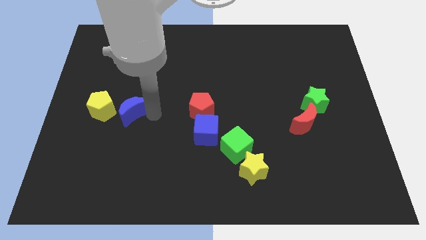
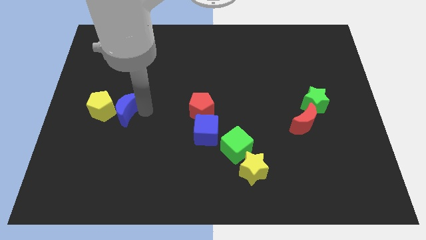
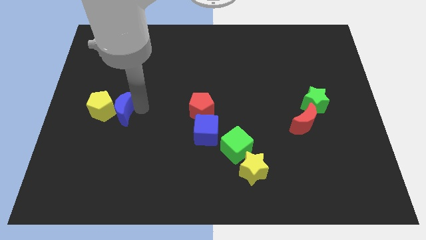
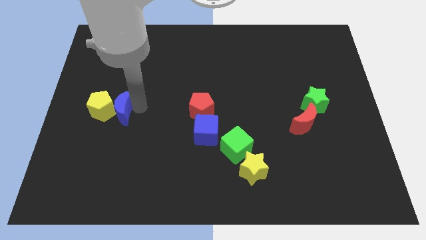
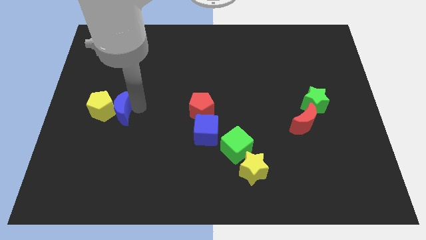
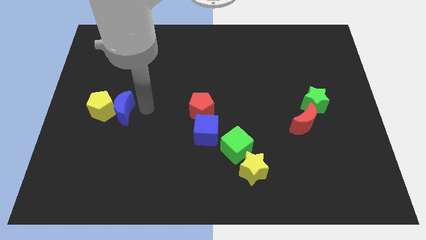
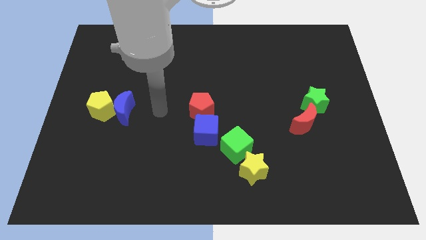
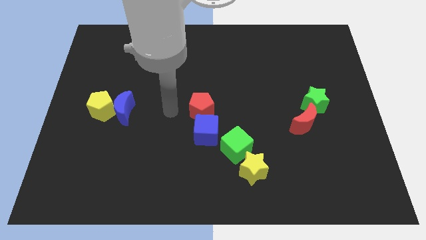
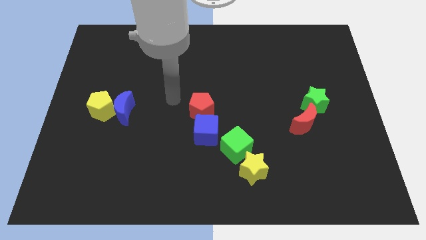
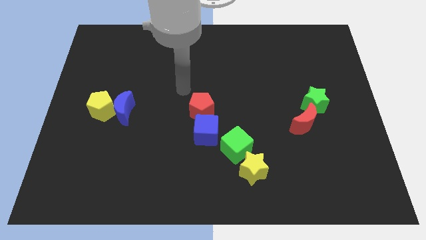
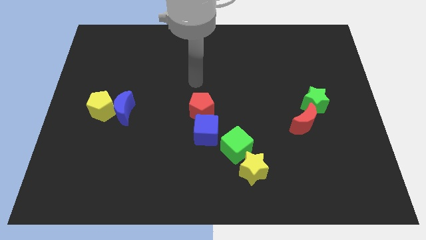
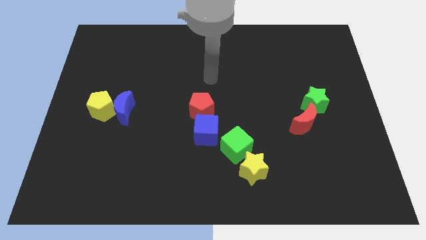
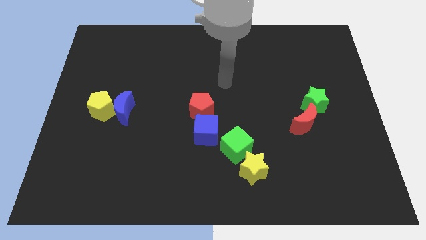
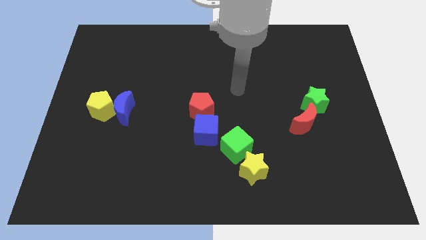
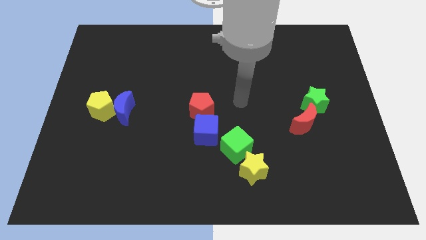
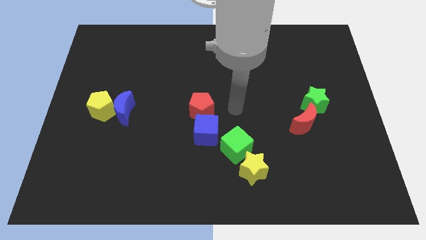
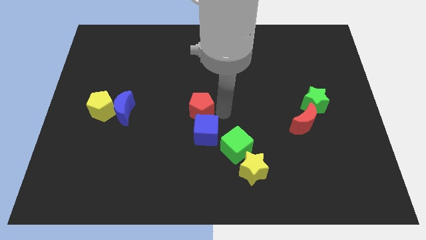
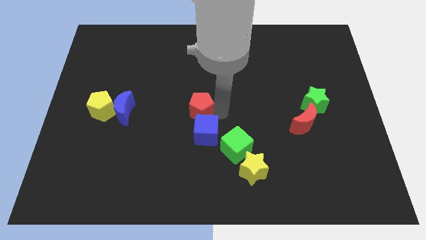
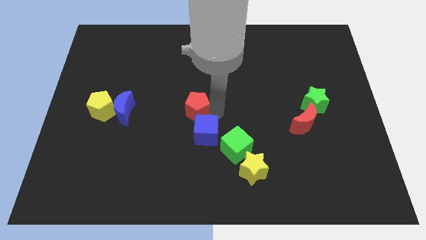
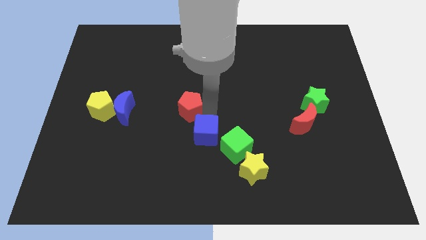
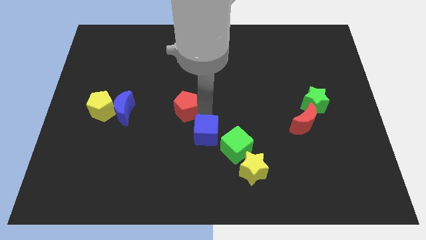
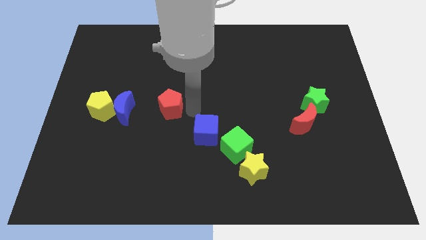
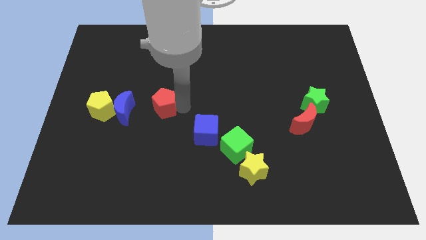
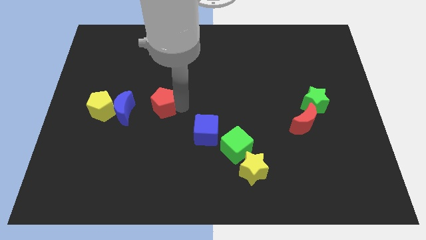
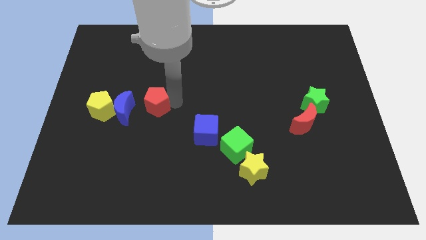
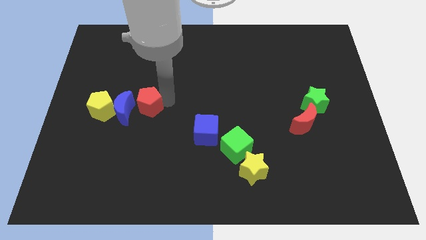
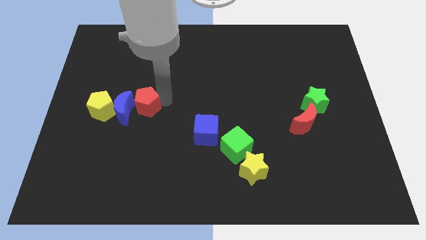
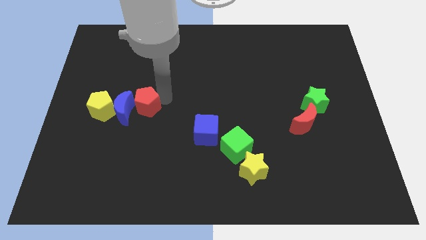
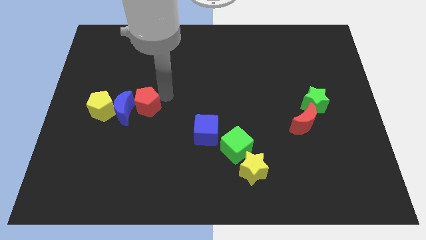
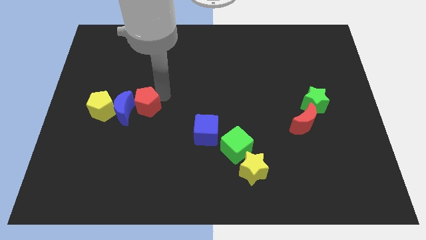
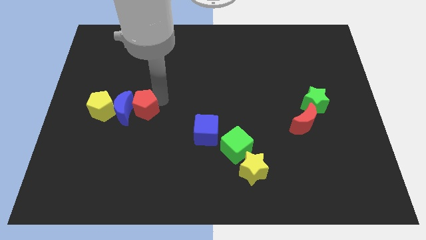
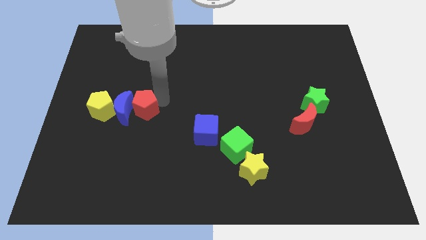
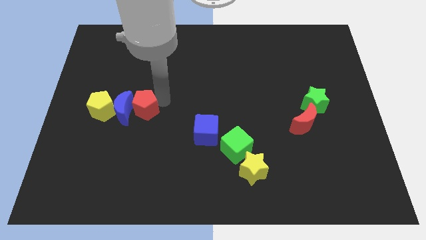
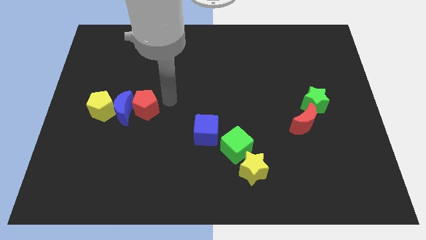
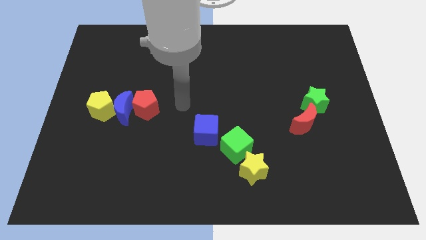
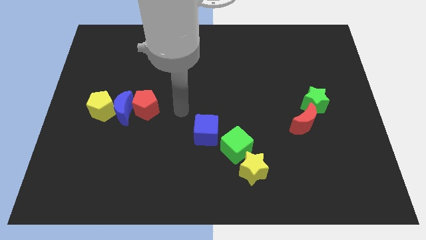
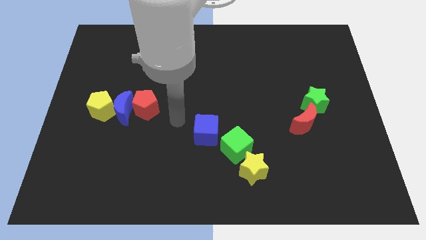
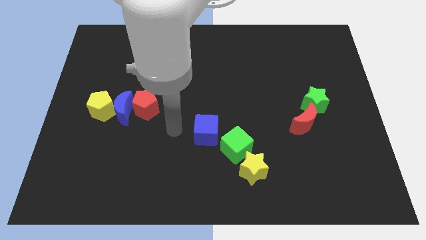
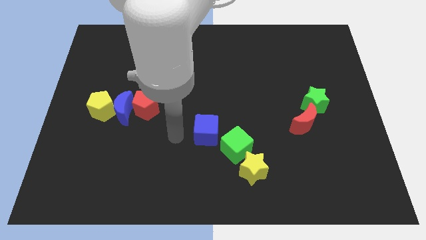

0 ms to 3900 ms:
push the red pentagon towards the blue crescent

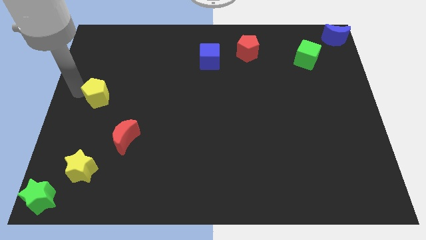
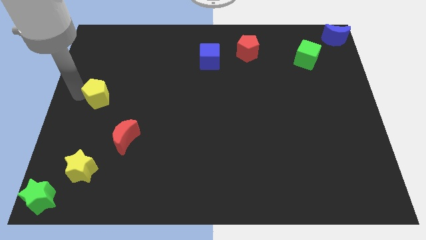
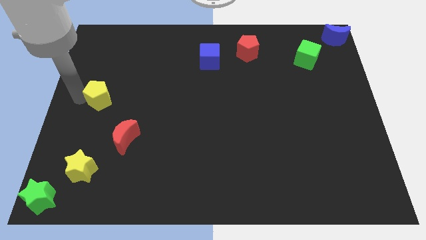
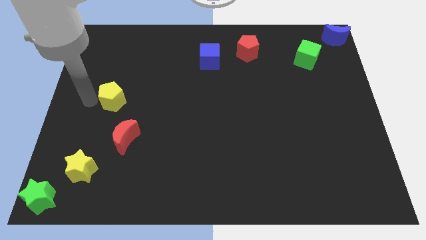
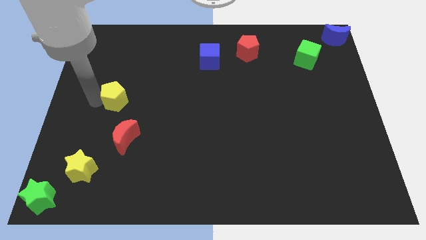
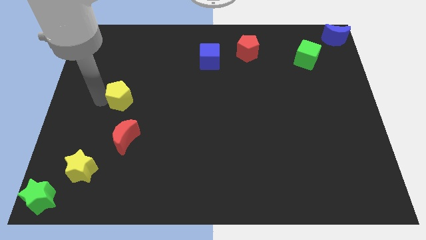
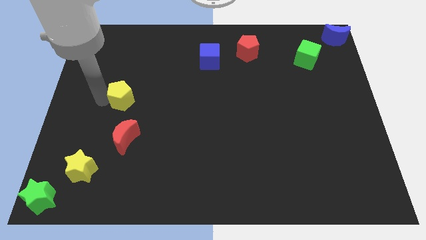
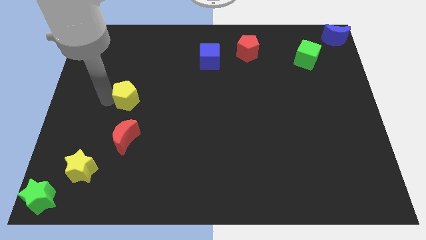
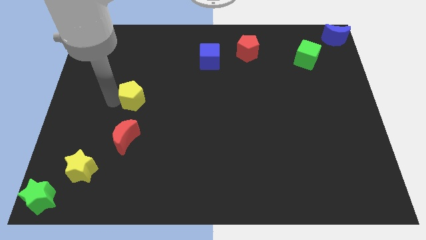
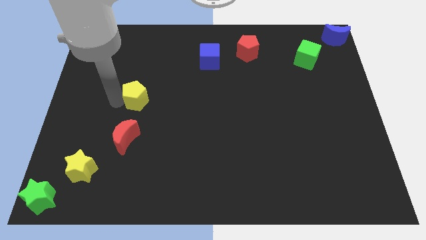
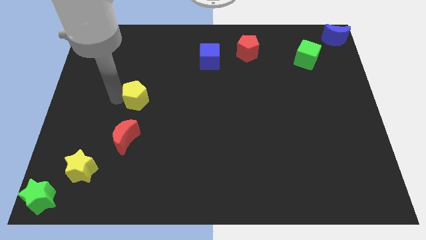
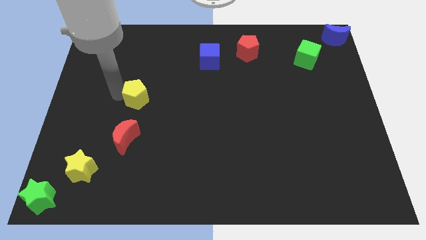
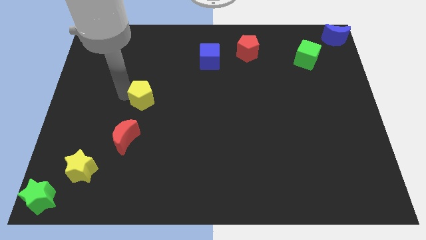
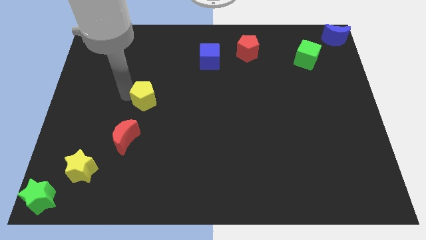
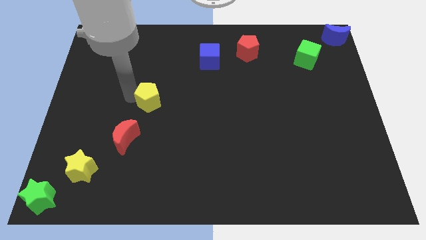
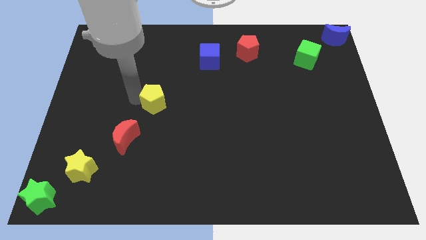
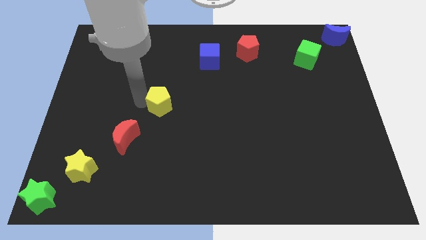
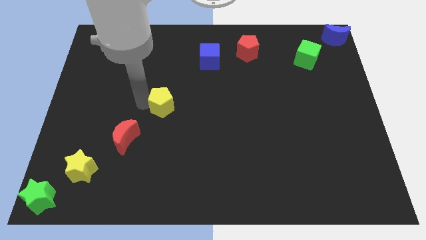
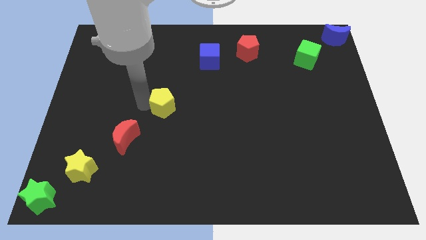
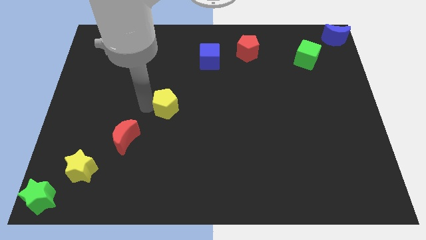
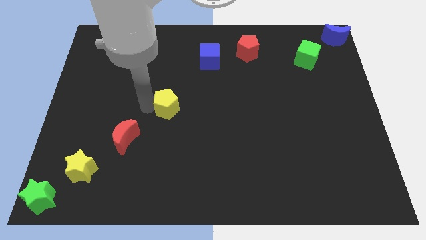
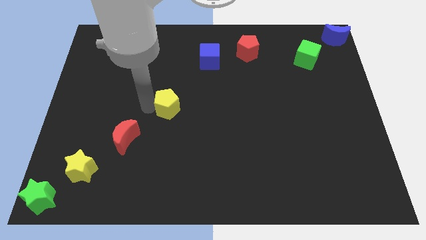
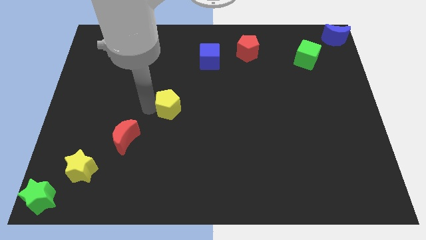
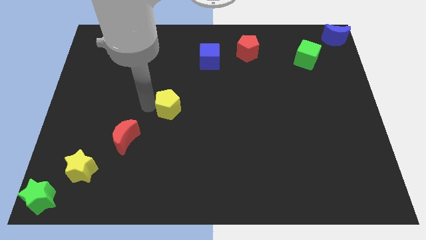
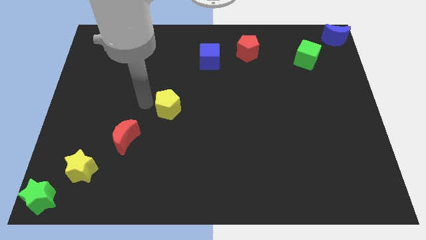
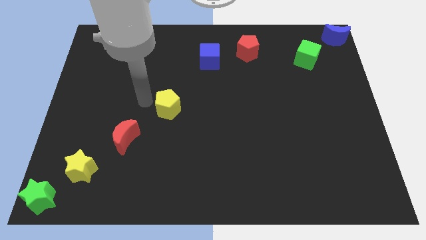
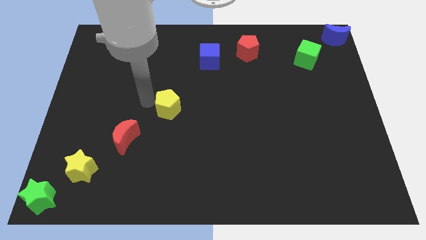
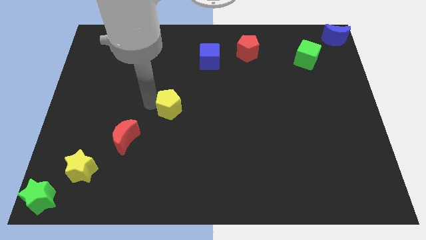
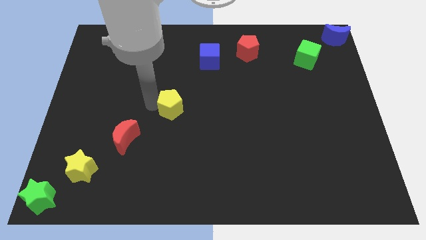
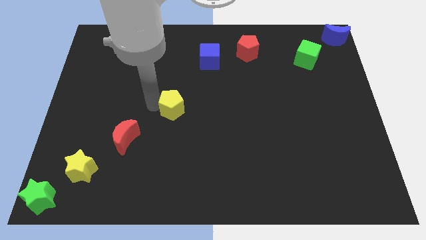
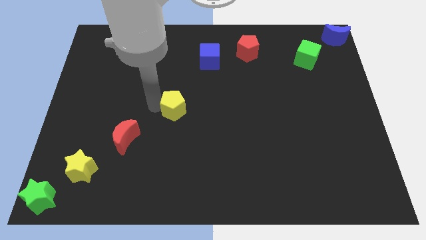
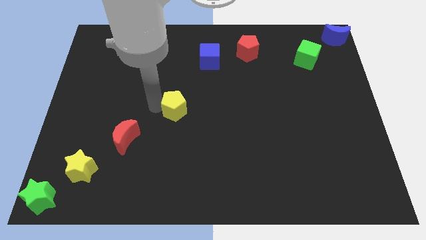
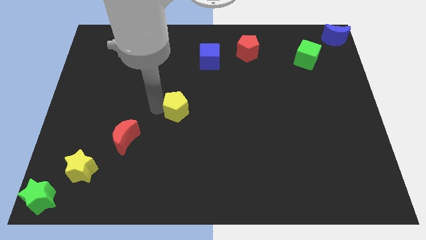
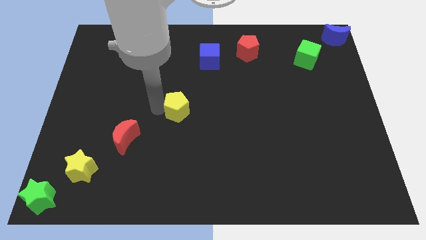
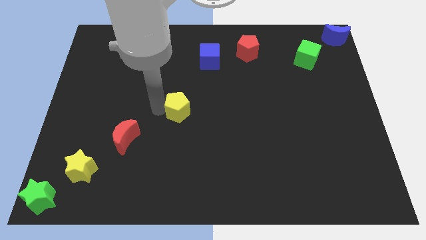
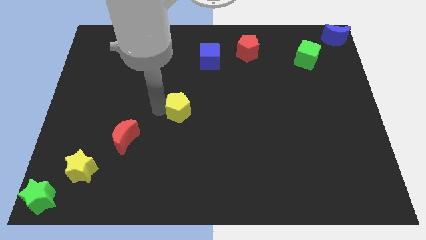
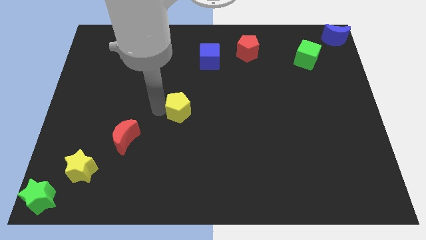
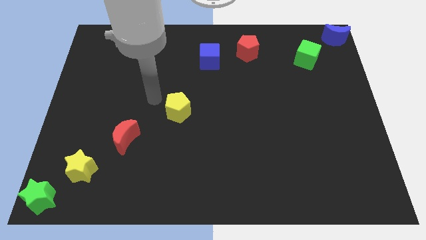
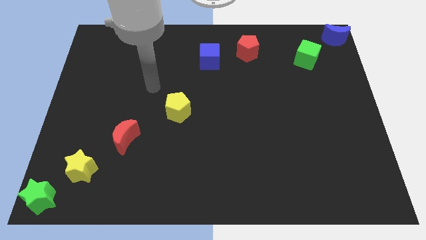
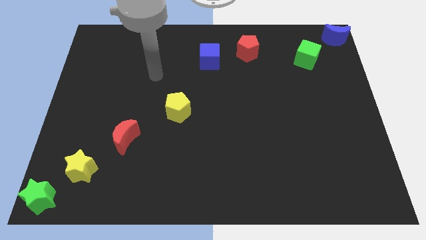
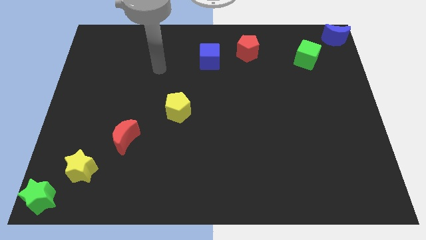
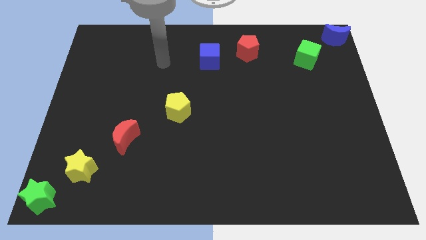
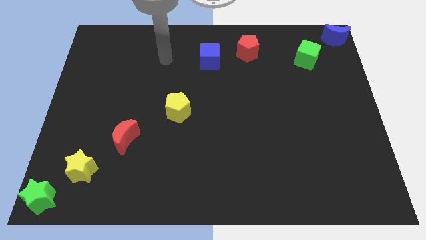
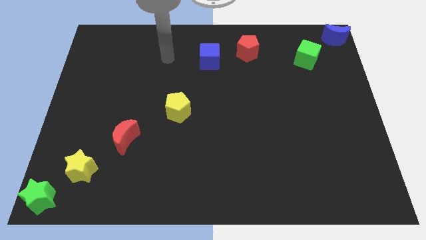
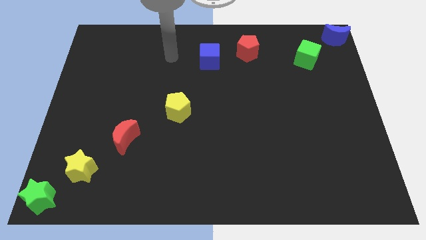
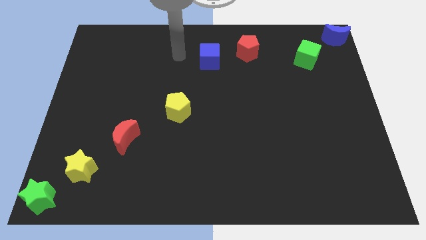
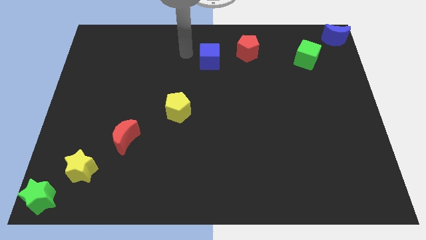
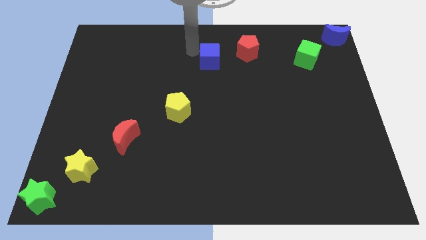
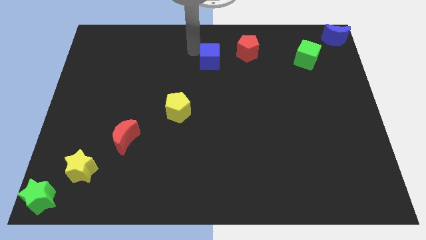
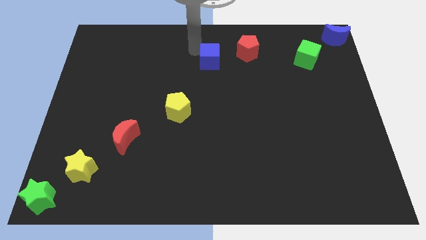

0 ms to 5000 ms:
place the yellow pentagon diagonally below the blue cube

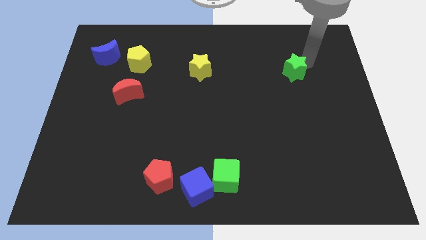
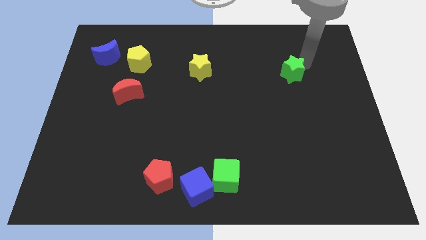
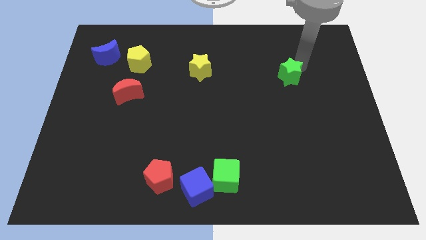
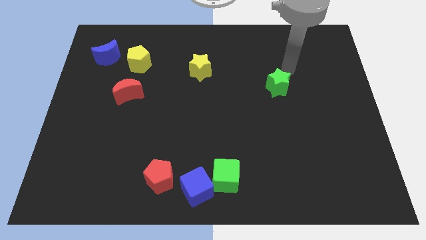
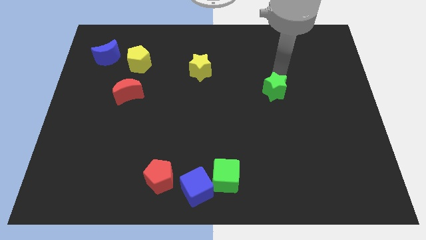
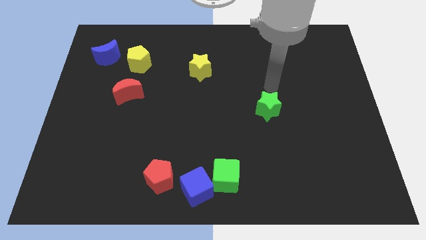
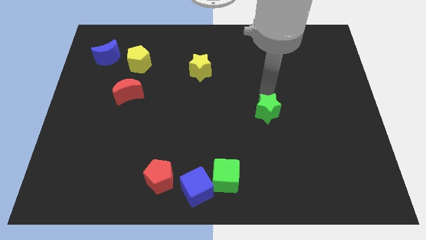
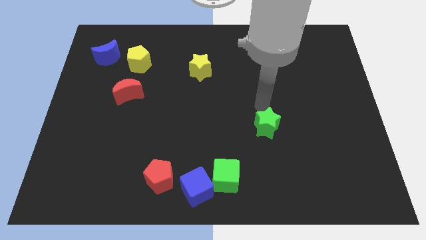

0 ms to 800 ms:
move the green star to the center
